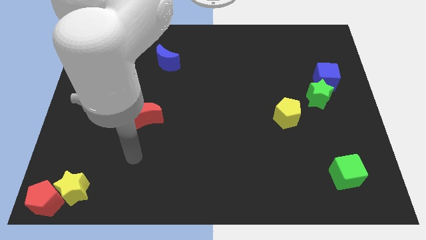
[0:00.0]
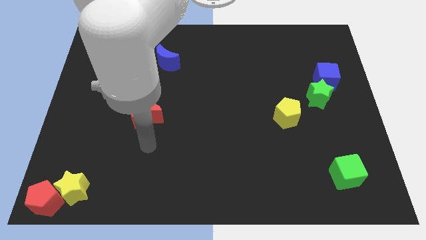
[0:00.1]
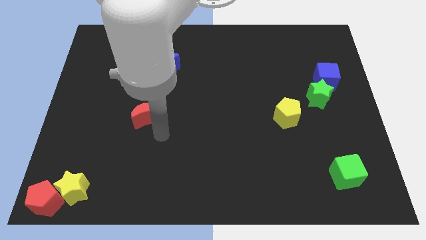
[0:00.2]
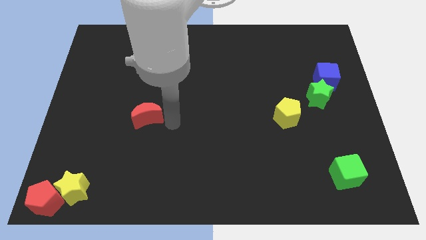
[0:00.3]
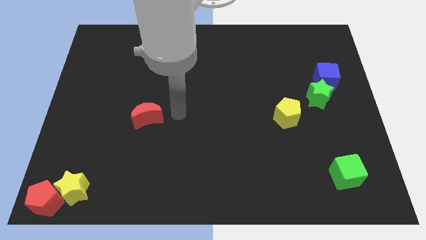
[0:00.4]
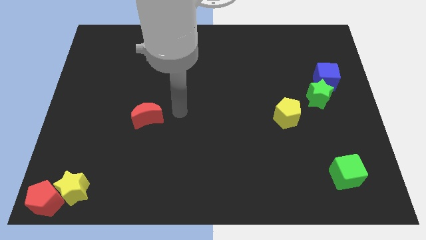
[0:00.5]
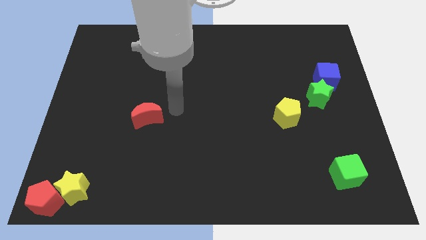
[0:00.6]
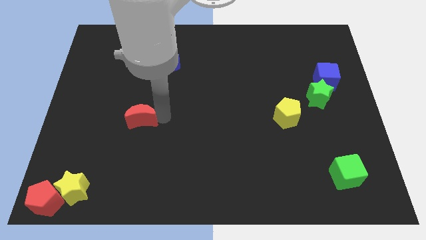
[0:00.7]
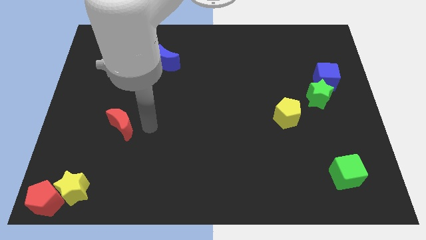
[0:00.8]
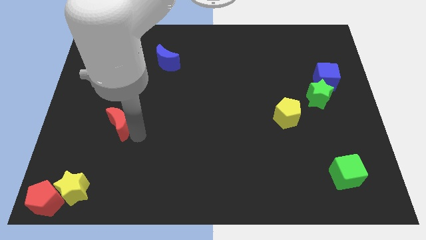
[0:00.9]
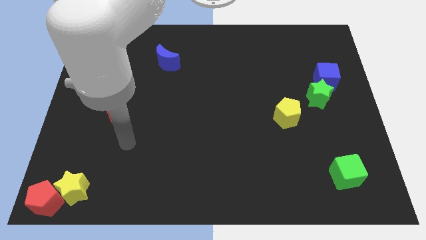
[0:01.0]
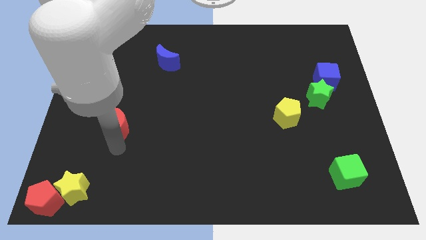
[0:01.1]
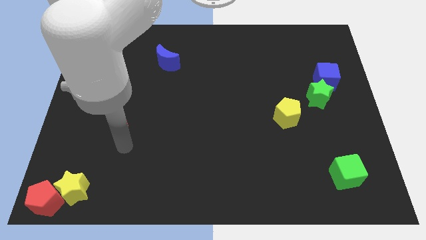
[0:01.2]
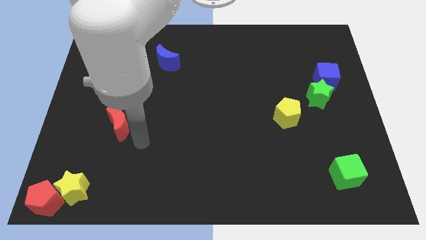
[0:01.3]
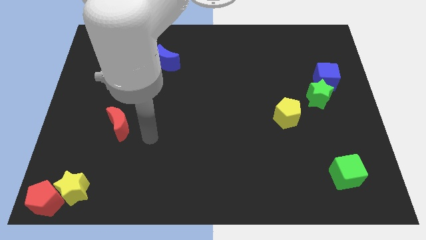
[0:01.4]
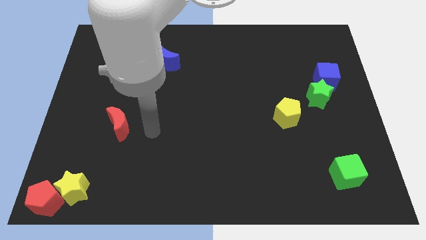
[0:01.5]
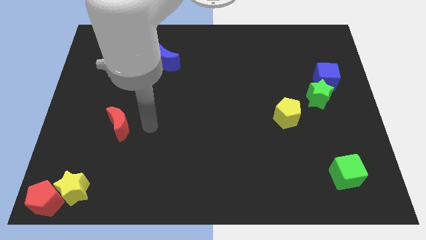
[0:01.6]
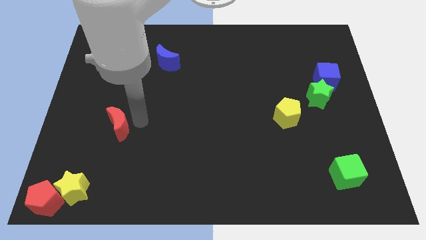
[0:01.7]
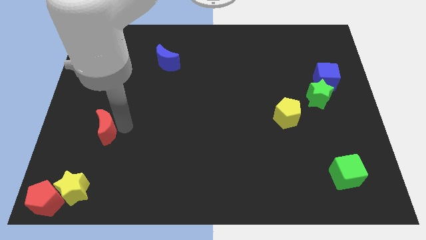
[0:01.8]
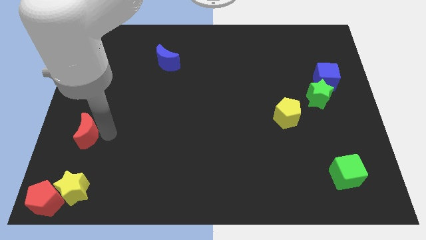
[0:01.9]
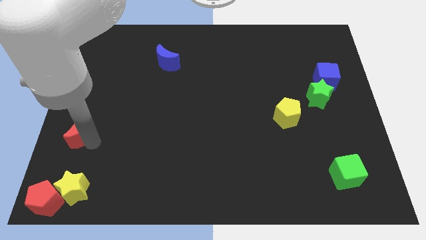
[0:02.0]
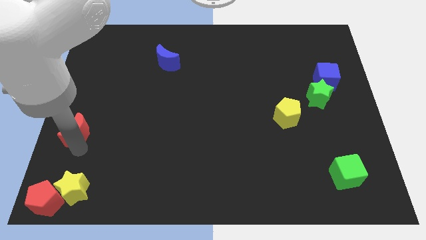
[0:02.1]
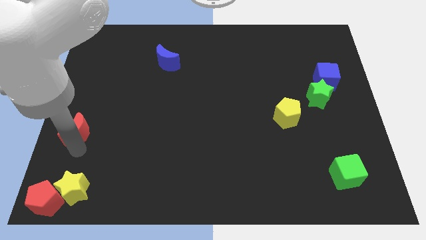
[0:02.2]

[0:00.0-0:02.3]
place red crescent above yellow star

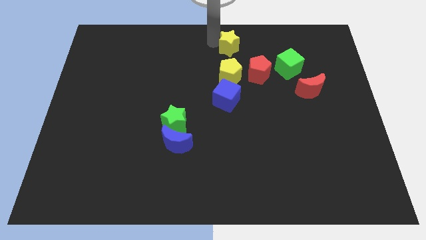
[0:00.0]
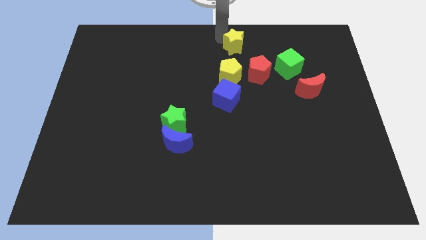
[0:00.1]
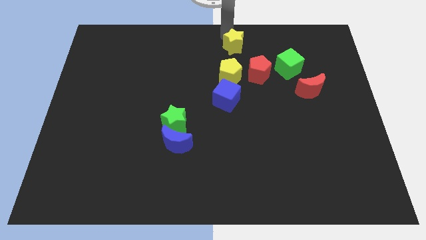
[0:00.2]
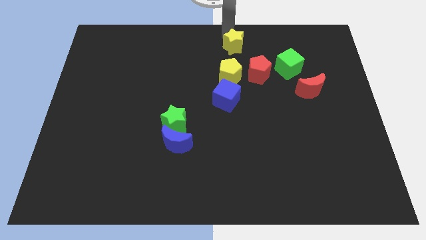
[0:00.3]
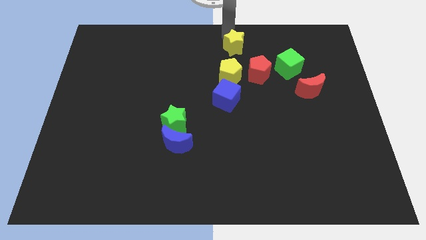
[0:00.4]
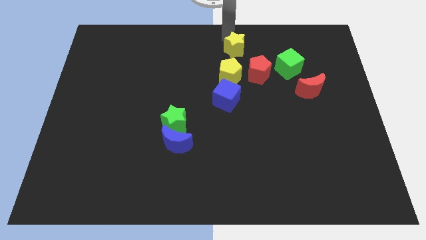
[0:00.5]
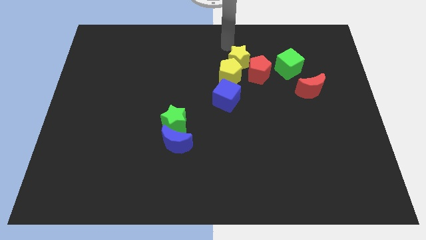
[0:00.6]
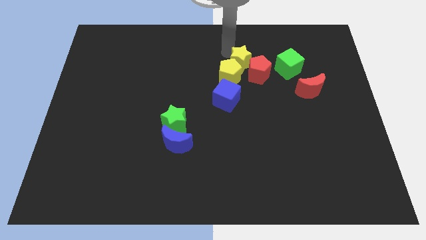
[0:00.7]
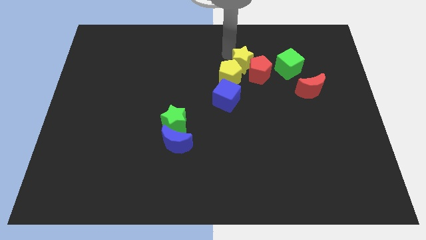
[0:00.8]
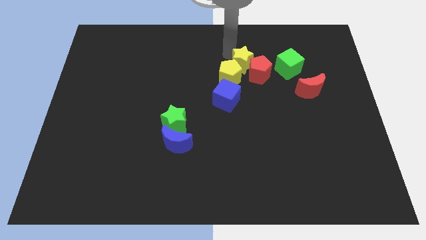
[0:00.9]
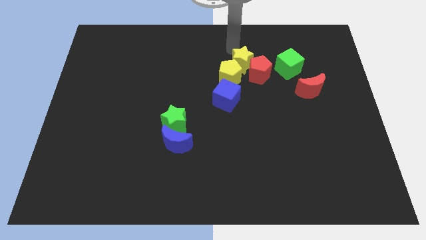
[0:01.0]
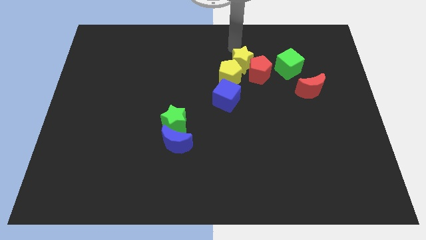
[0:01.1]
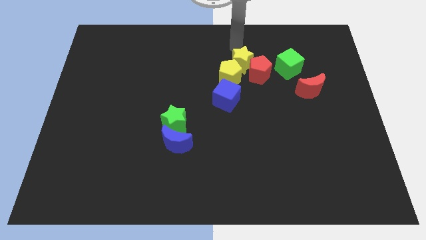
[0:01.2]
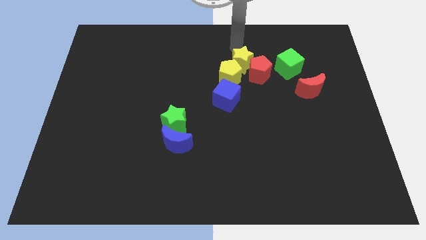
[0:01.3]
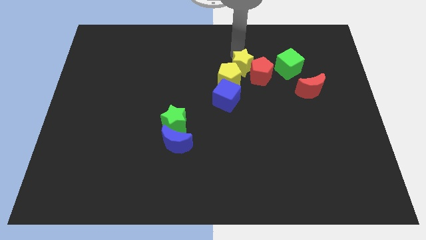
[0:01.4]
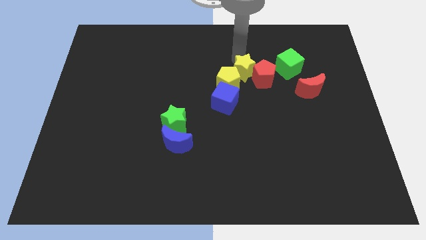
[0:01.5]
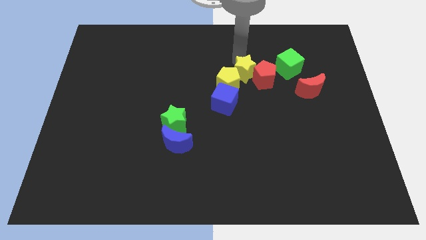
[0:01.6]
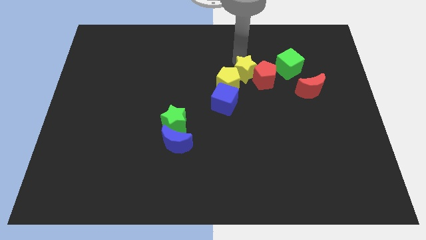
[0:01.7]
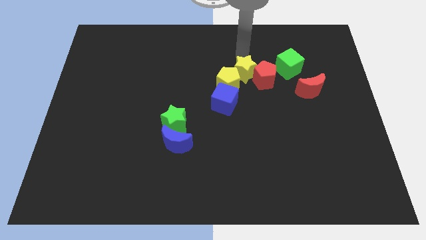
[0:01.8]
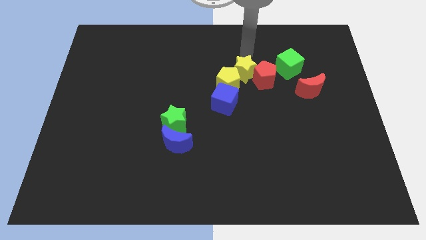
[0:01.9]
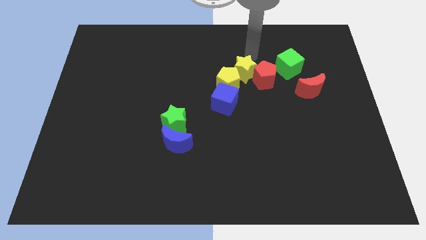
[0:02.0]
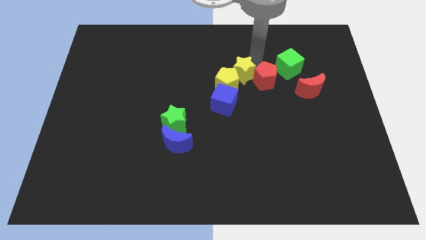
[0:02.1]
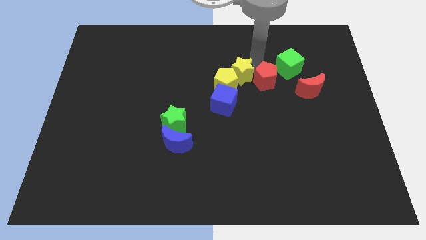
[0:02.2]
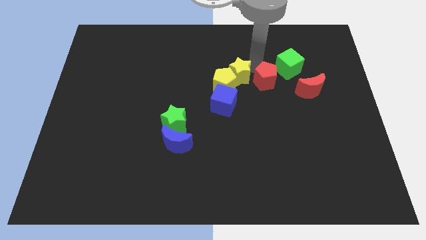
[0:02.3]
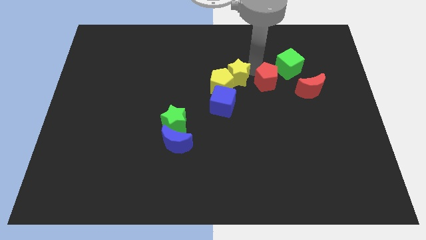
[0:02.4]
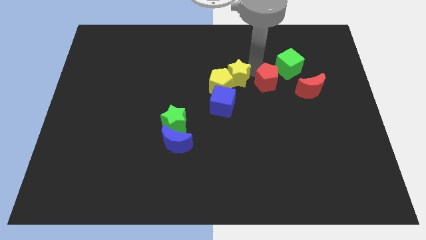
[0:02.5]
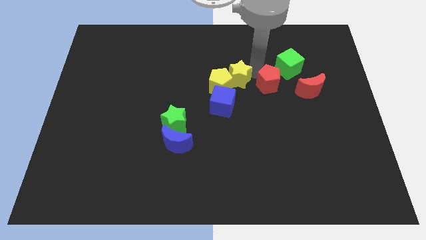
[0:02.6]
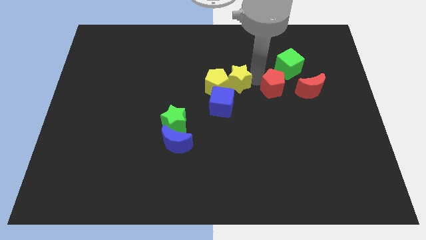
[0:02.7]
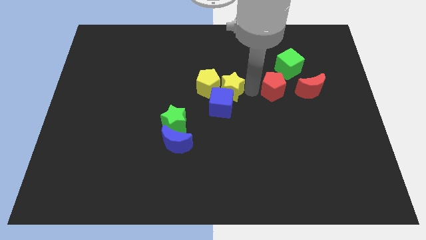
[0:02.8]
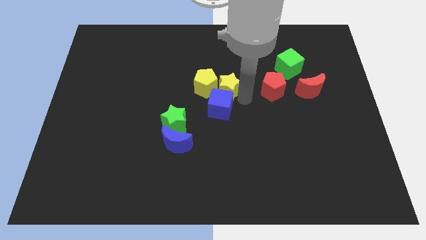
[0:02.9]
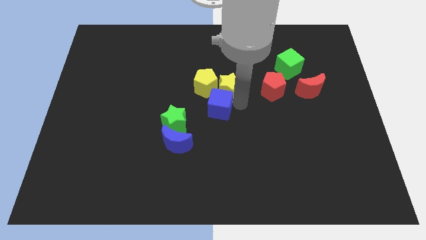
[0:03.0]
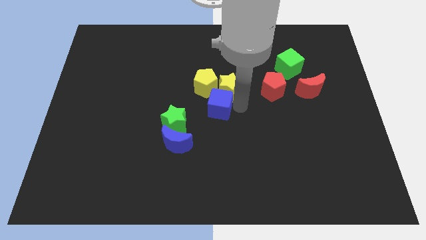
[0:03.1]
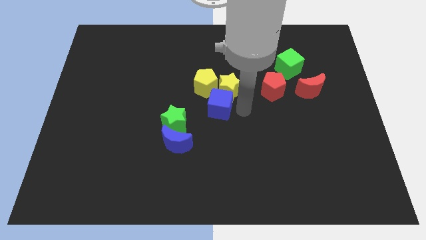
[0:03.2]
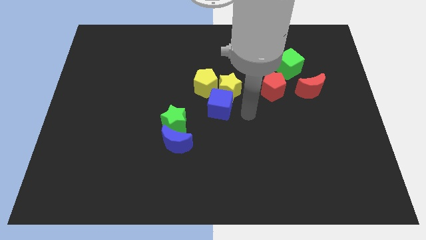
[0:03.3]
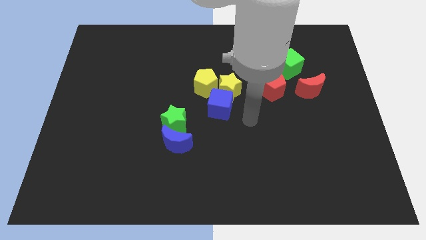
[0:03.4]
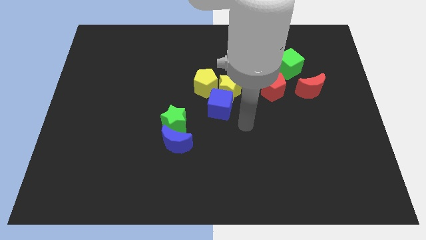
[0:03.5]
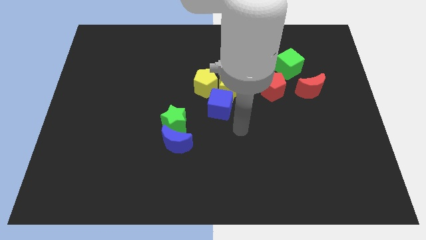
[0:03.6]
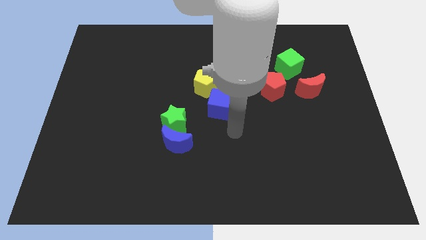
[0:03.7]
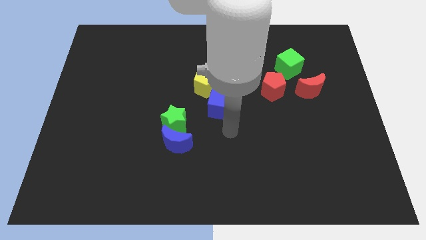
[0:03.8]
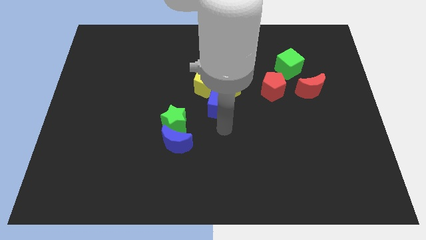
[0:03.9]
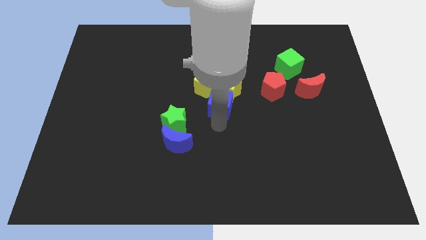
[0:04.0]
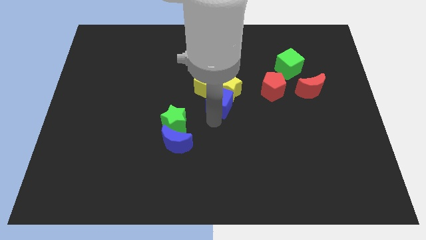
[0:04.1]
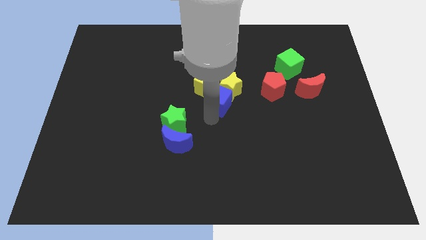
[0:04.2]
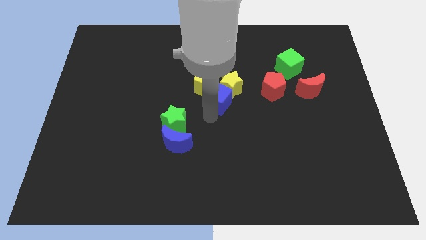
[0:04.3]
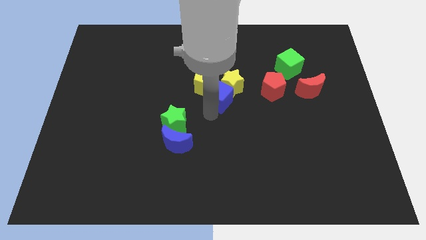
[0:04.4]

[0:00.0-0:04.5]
place the yellow star in between the red pentagon and yellow pentagon

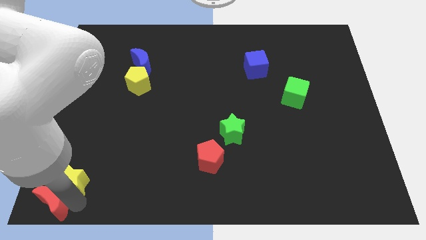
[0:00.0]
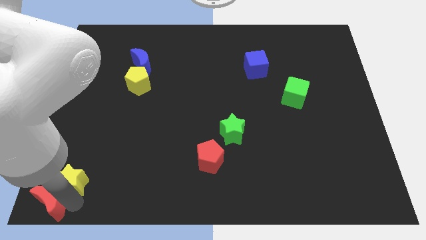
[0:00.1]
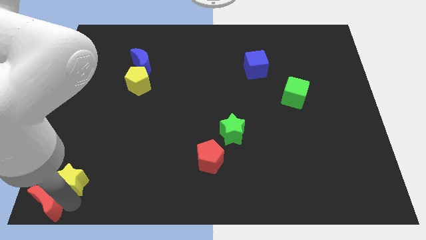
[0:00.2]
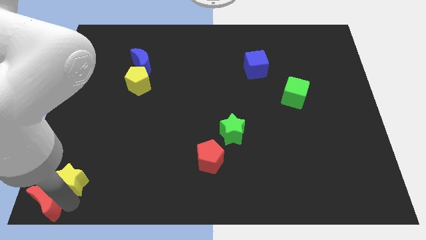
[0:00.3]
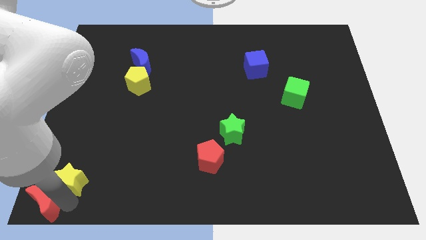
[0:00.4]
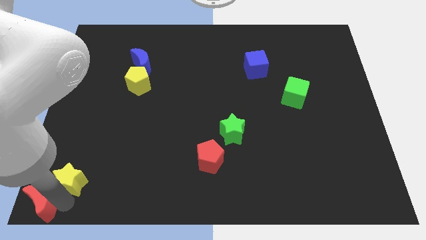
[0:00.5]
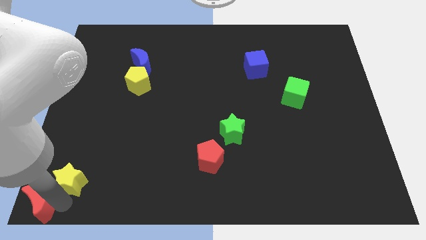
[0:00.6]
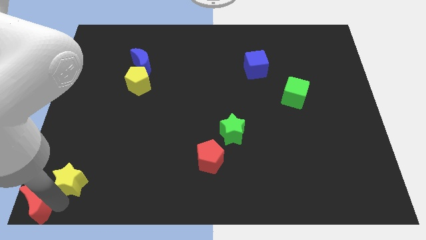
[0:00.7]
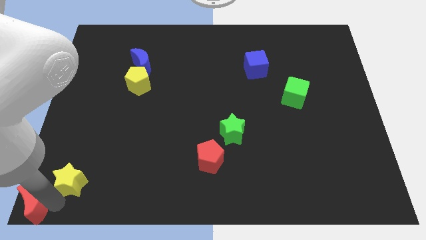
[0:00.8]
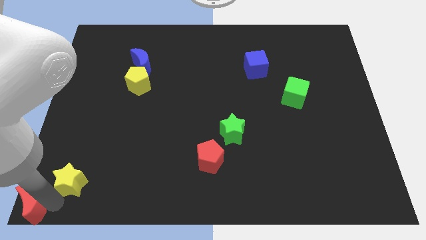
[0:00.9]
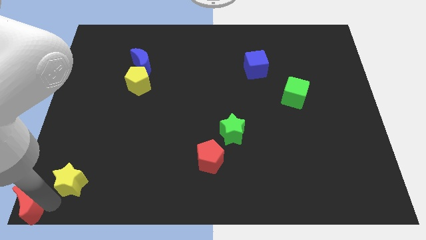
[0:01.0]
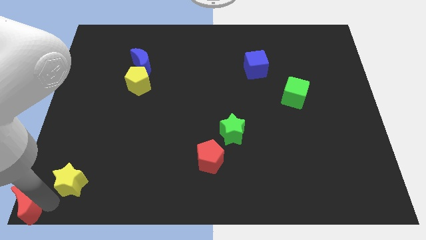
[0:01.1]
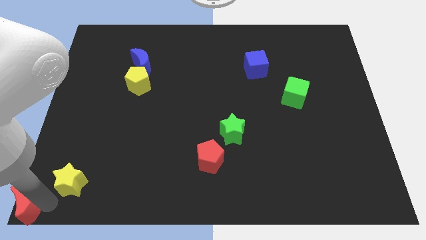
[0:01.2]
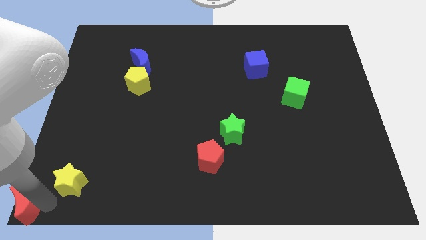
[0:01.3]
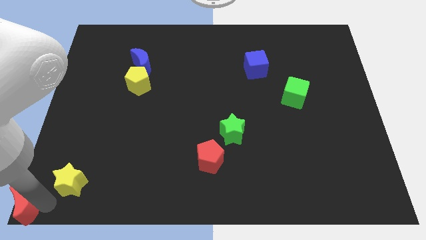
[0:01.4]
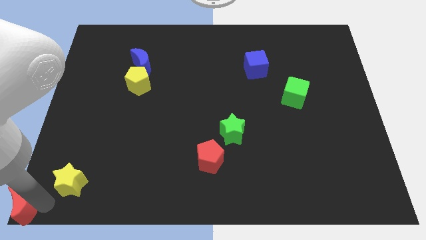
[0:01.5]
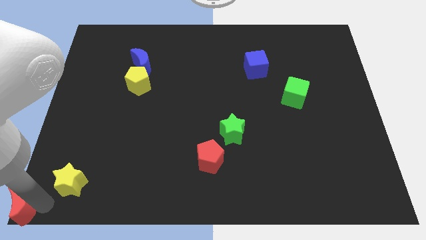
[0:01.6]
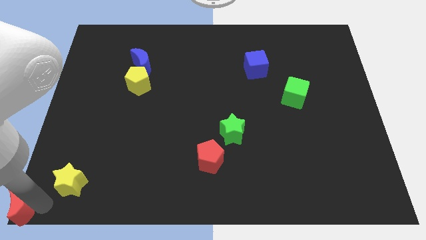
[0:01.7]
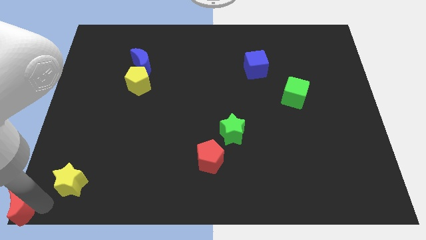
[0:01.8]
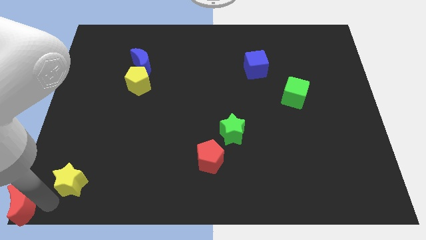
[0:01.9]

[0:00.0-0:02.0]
place the red crescent at the bottom left corner of the board

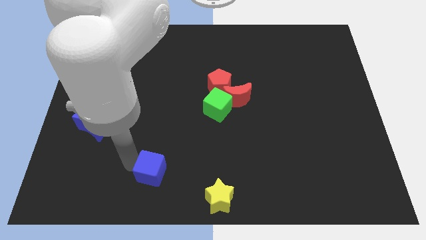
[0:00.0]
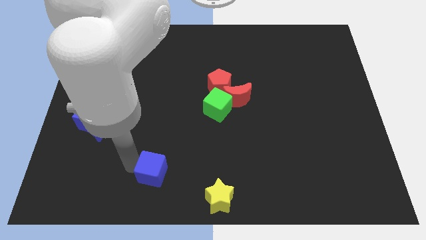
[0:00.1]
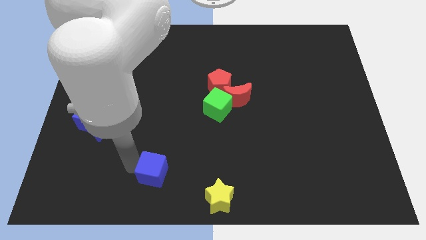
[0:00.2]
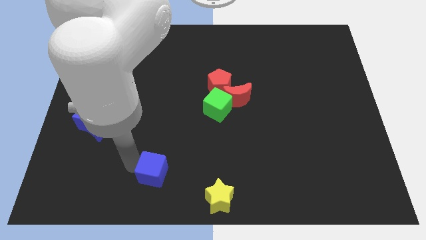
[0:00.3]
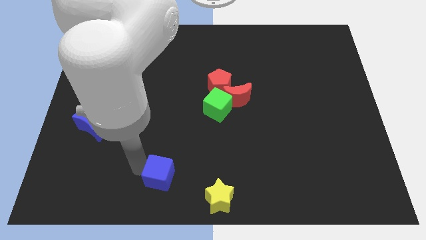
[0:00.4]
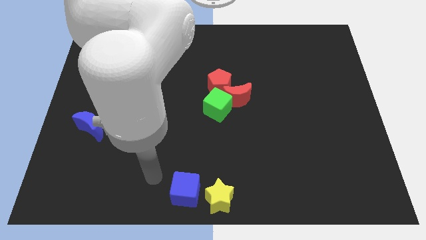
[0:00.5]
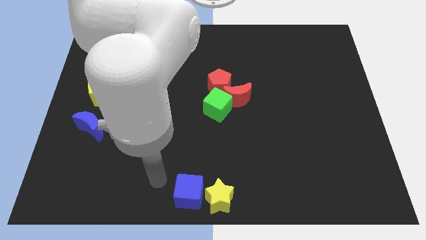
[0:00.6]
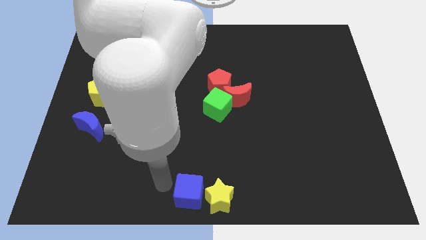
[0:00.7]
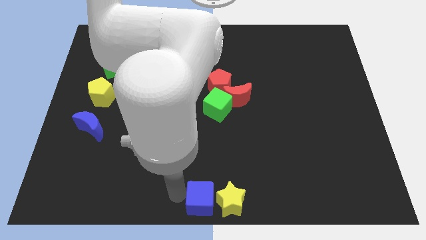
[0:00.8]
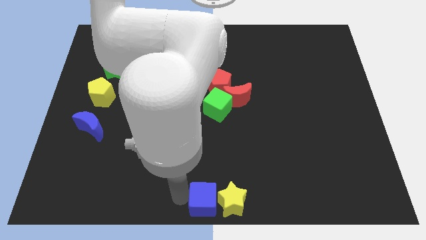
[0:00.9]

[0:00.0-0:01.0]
move the blue cube to the left of the yellow star
